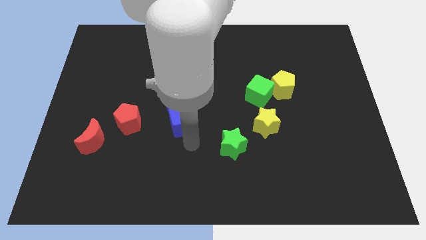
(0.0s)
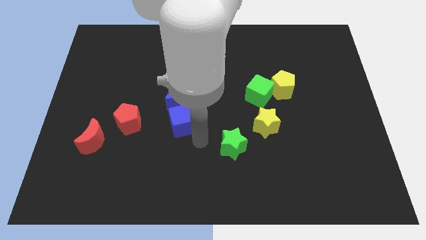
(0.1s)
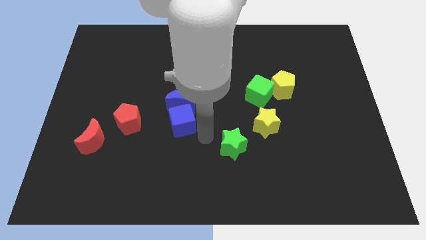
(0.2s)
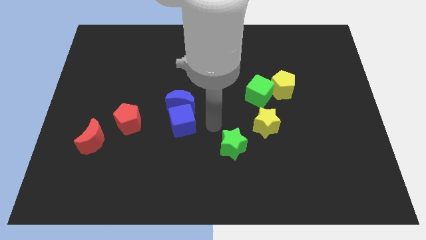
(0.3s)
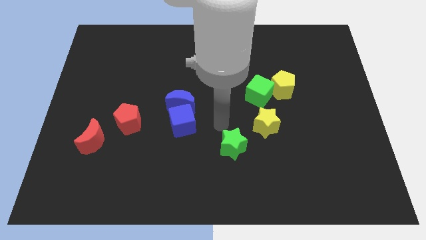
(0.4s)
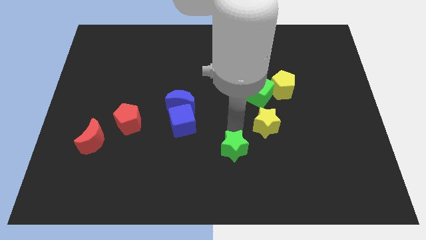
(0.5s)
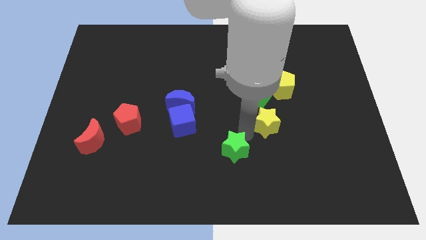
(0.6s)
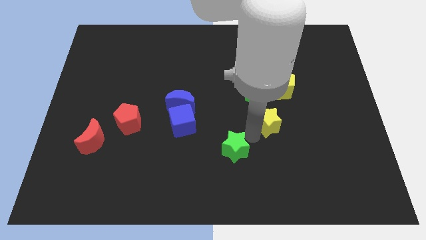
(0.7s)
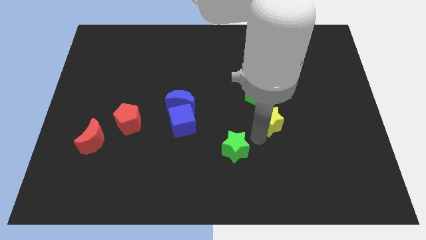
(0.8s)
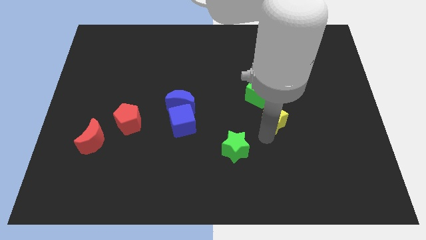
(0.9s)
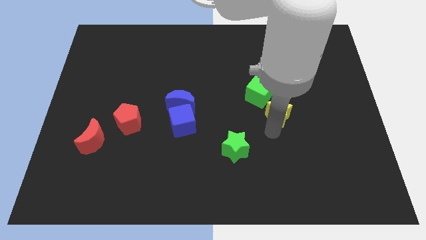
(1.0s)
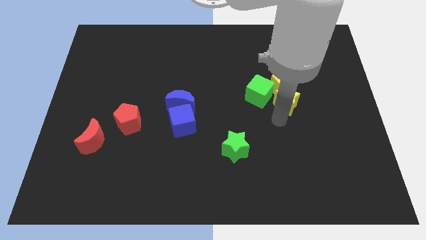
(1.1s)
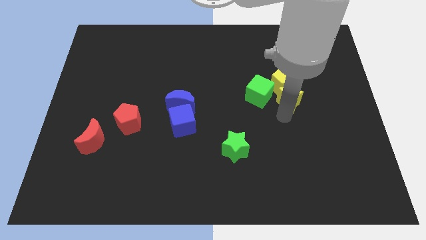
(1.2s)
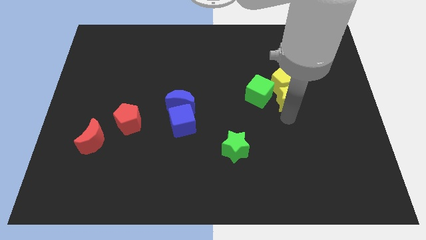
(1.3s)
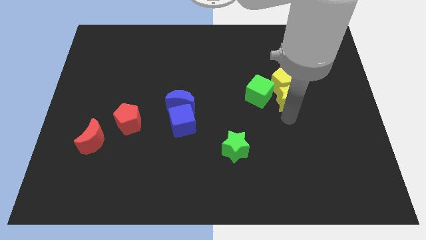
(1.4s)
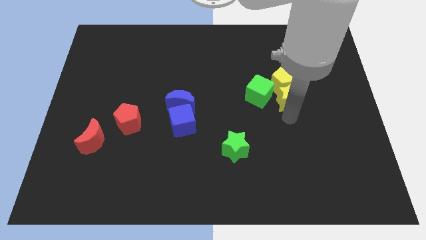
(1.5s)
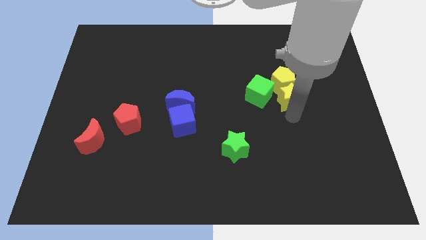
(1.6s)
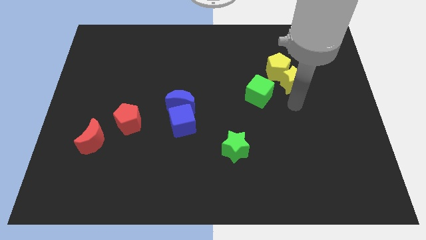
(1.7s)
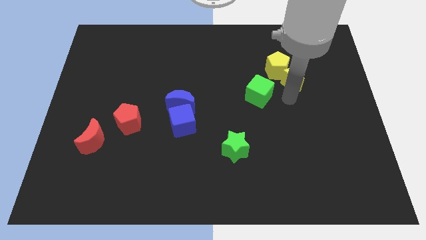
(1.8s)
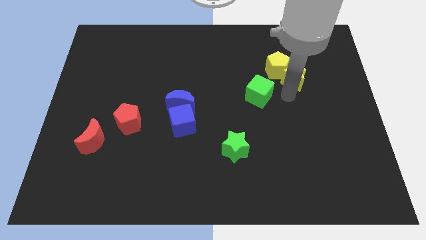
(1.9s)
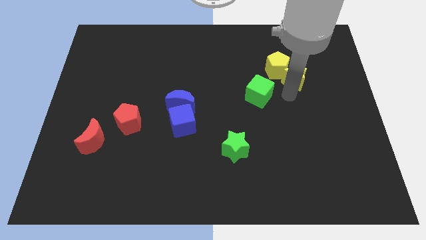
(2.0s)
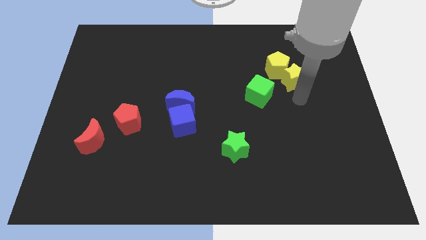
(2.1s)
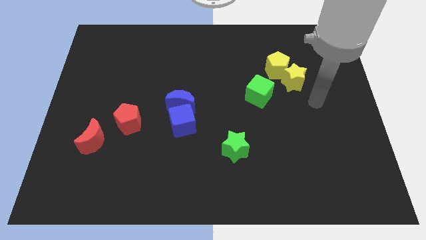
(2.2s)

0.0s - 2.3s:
move yellow star into yellow pentagon

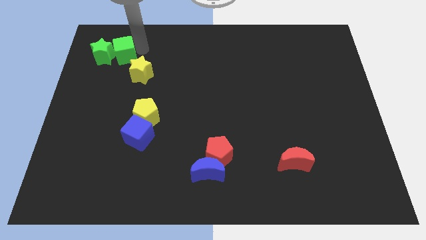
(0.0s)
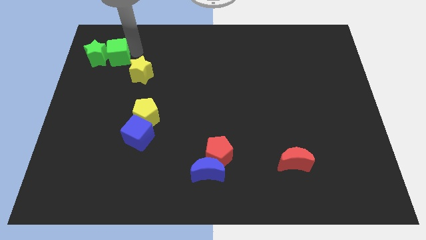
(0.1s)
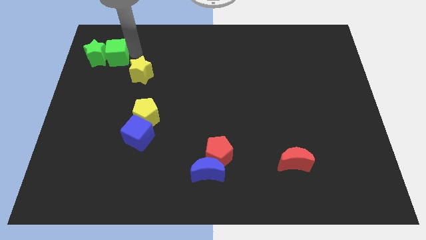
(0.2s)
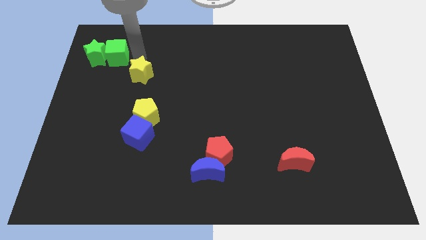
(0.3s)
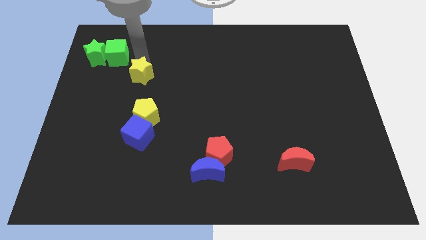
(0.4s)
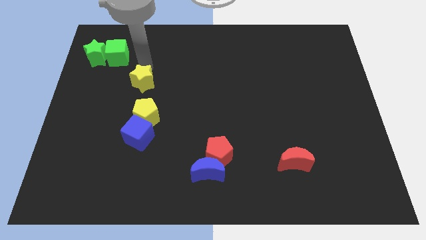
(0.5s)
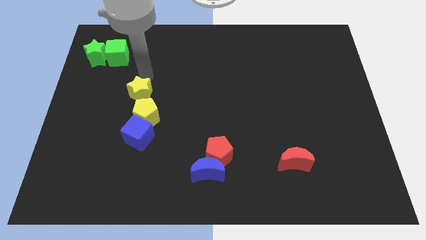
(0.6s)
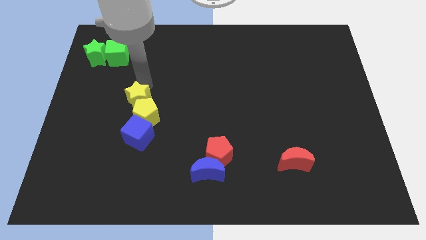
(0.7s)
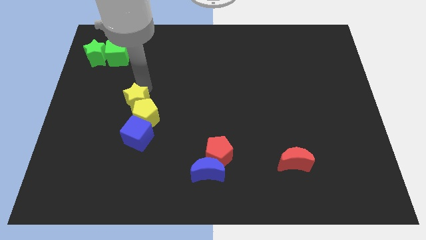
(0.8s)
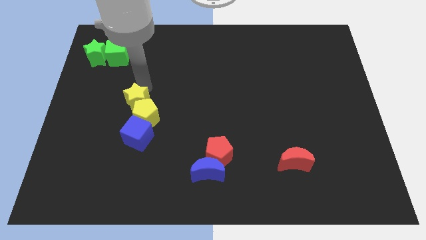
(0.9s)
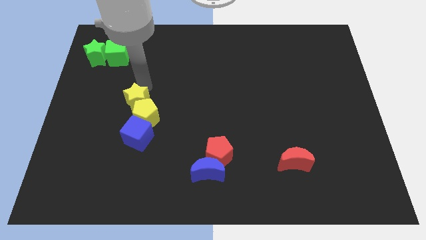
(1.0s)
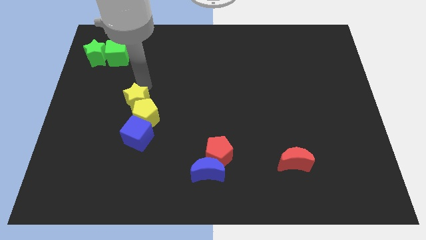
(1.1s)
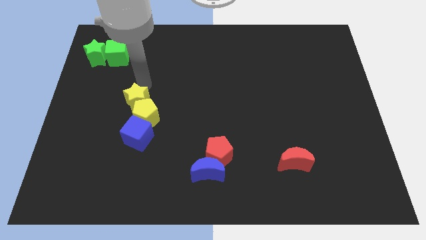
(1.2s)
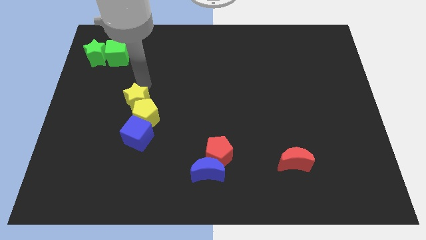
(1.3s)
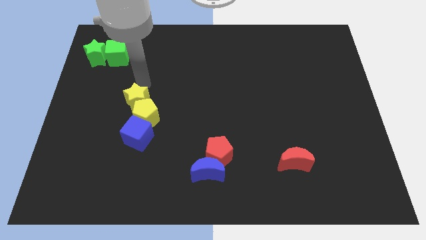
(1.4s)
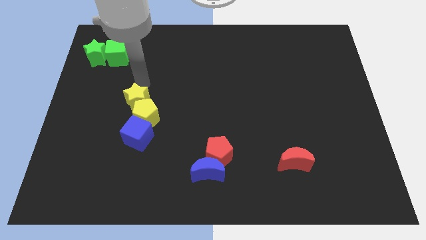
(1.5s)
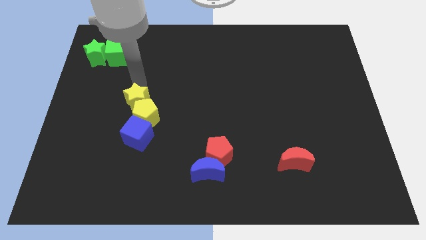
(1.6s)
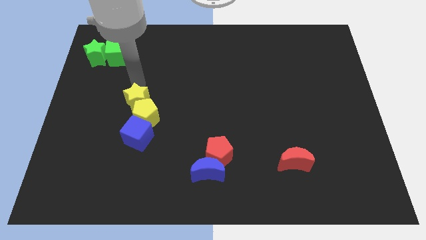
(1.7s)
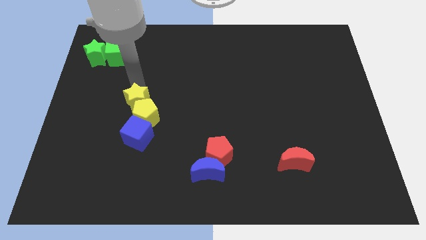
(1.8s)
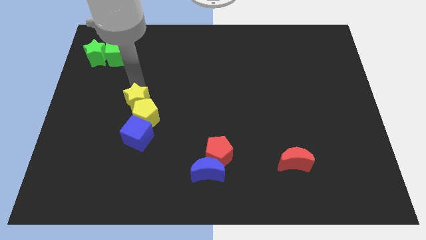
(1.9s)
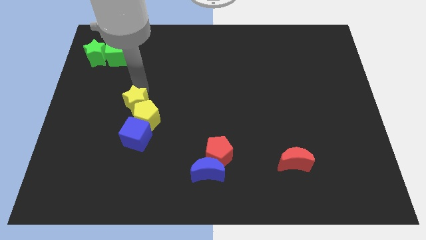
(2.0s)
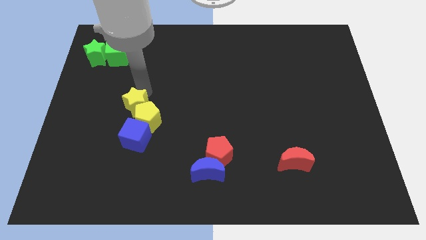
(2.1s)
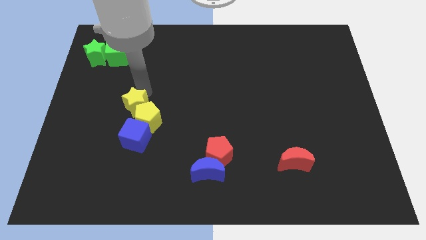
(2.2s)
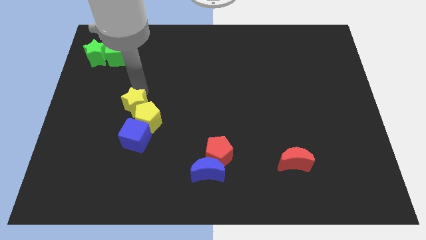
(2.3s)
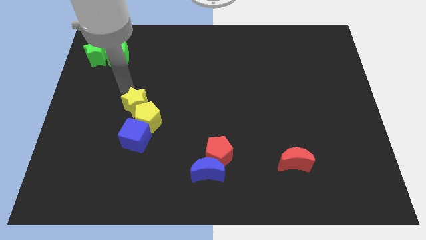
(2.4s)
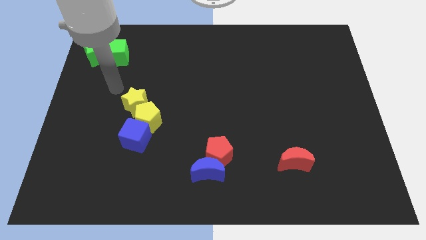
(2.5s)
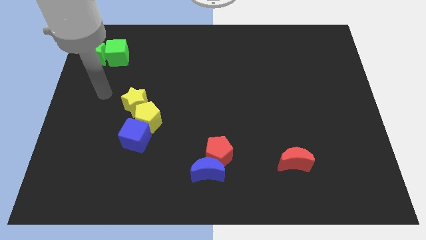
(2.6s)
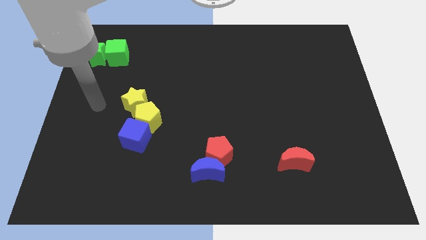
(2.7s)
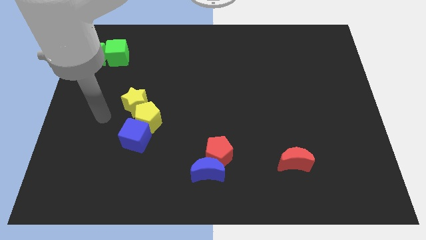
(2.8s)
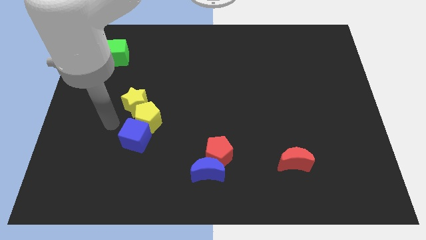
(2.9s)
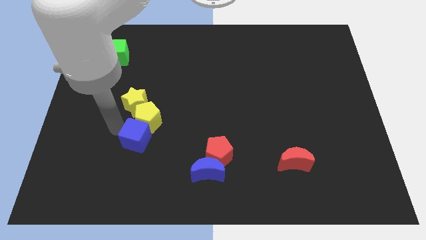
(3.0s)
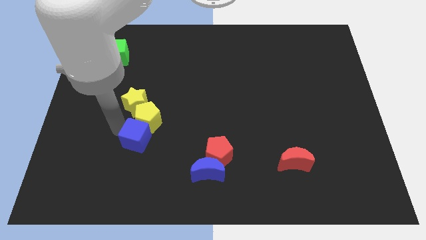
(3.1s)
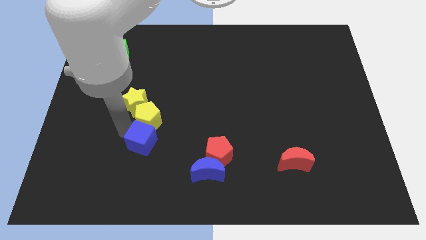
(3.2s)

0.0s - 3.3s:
move the yellow star top left to yellow pentagon

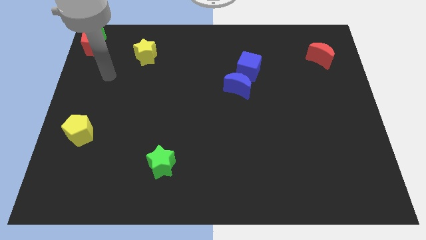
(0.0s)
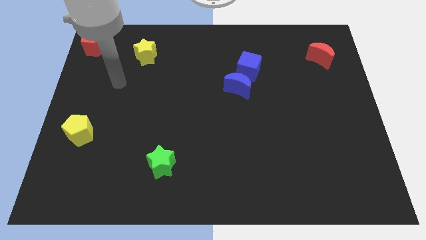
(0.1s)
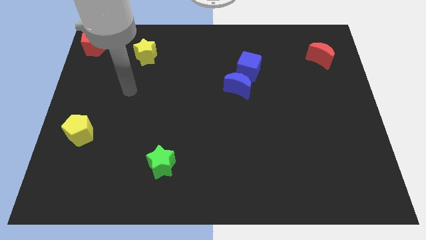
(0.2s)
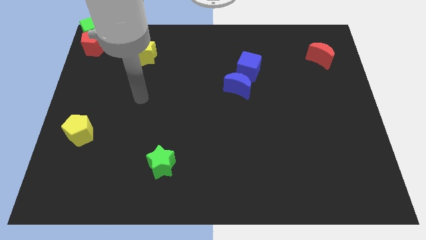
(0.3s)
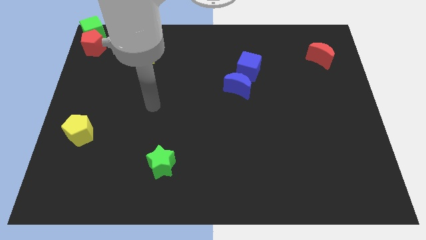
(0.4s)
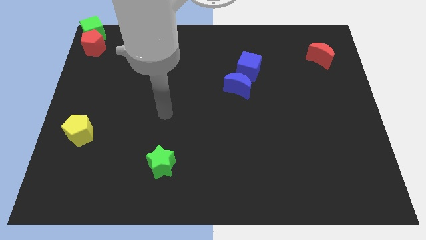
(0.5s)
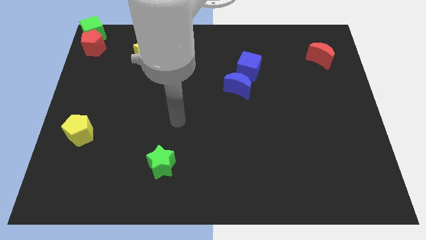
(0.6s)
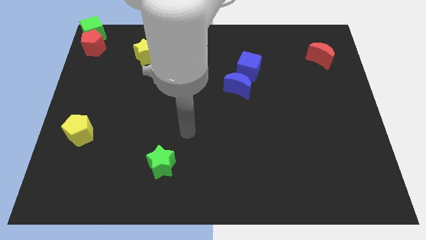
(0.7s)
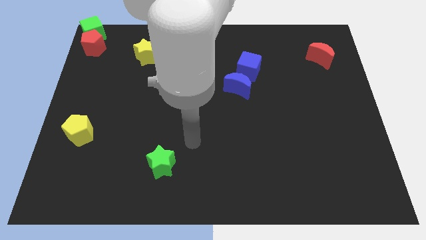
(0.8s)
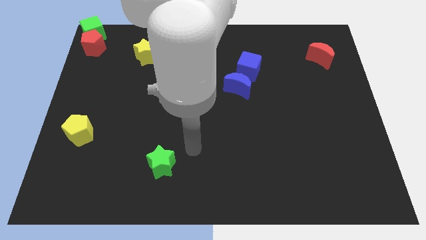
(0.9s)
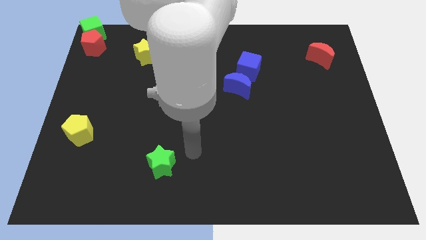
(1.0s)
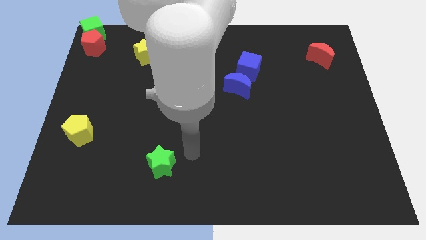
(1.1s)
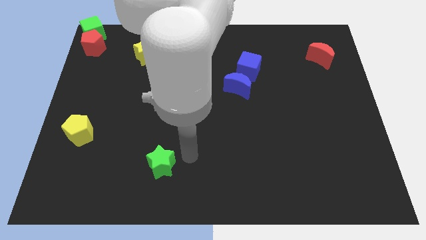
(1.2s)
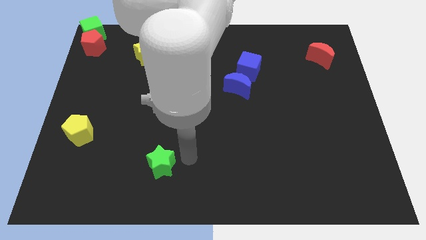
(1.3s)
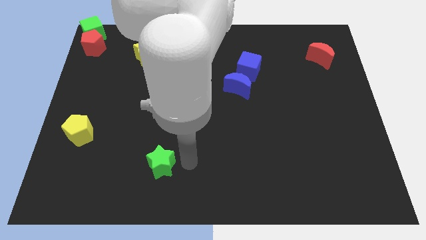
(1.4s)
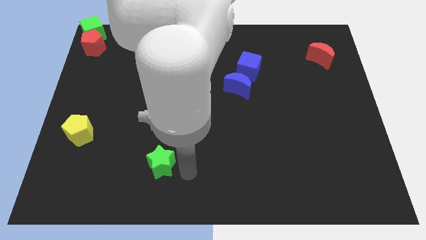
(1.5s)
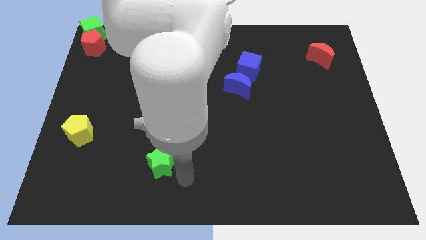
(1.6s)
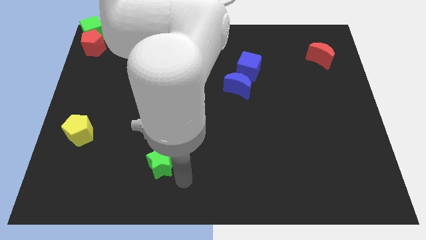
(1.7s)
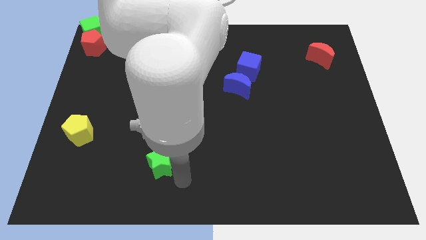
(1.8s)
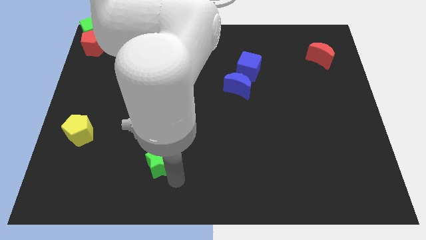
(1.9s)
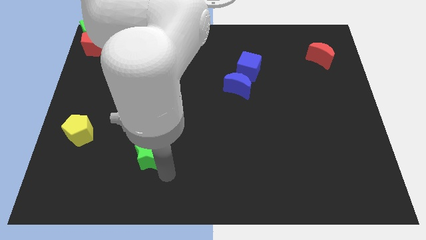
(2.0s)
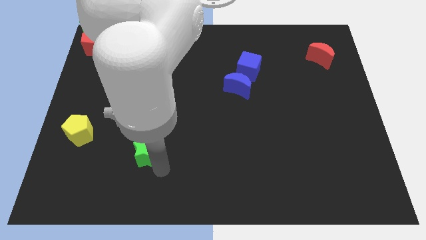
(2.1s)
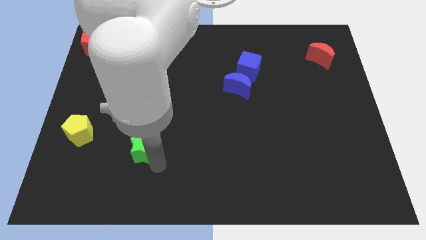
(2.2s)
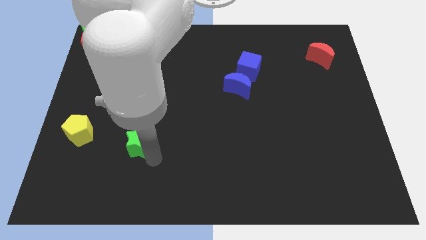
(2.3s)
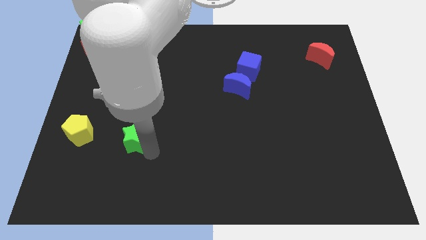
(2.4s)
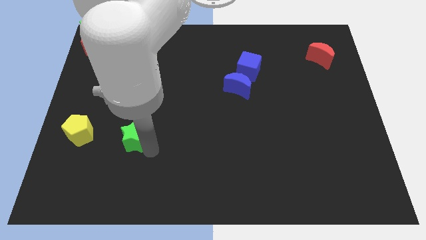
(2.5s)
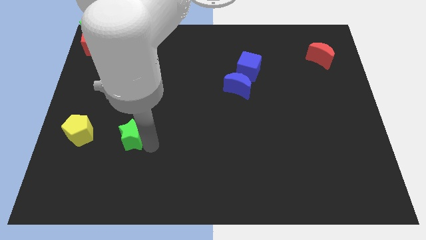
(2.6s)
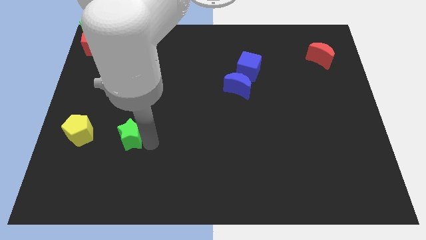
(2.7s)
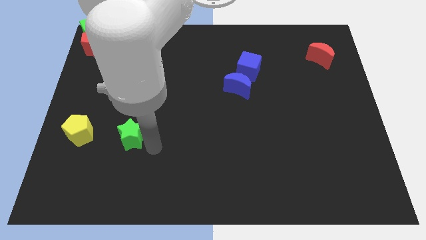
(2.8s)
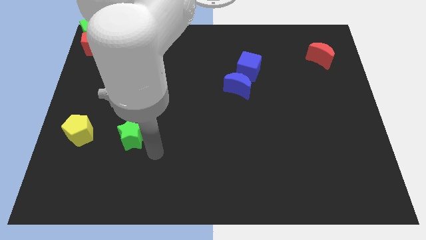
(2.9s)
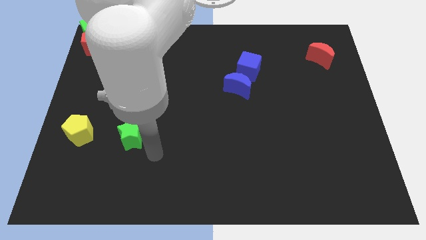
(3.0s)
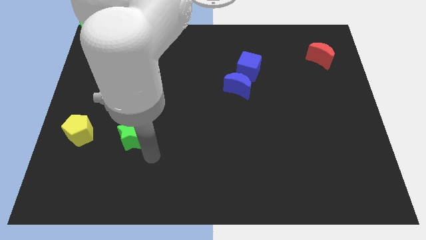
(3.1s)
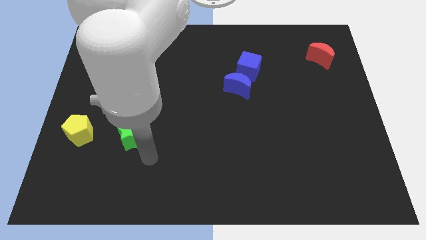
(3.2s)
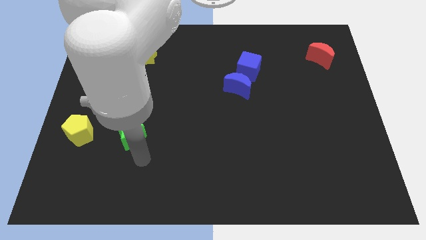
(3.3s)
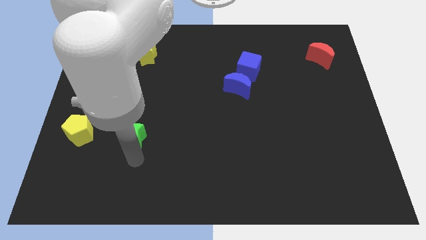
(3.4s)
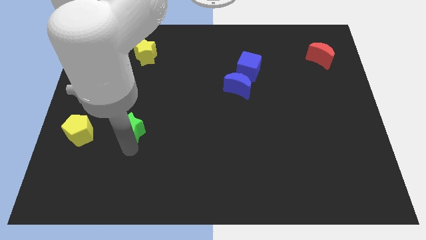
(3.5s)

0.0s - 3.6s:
move the green star to the right of the yellow pentagon
